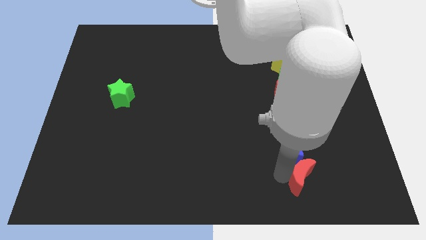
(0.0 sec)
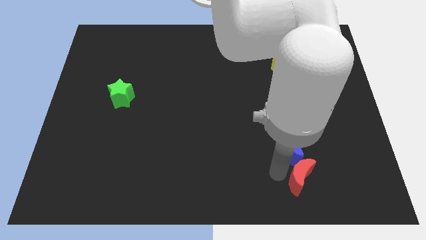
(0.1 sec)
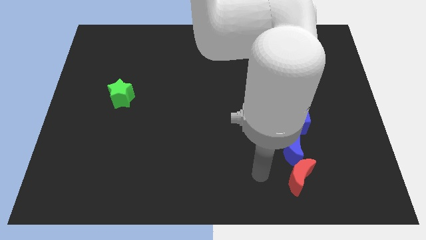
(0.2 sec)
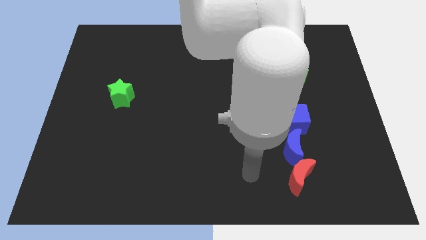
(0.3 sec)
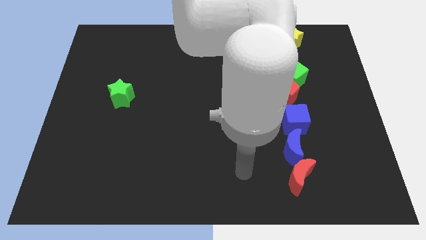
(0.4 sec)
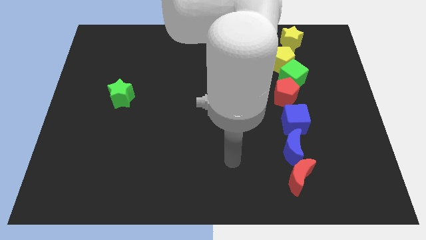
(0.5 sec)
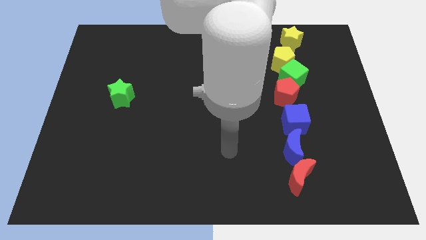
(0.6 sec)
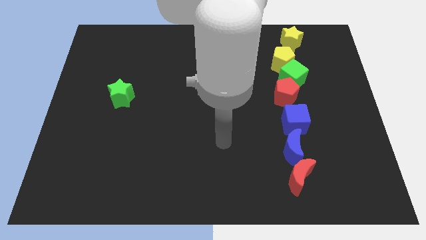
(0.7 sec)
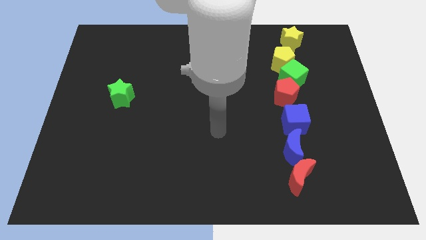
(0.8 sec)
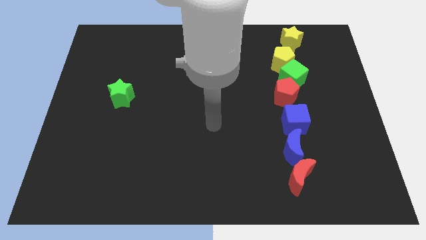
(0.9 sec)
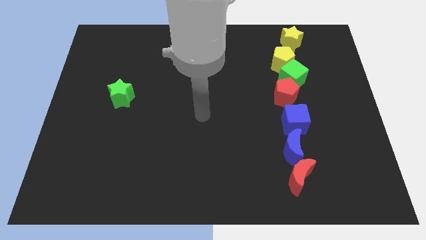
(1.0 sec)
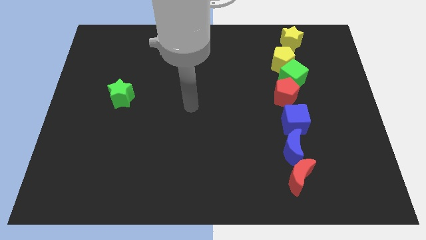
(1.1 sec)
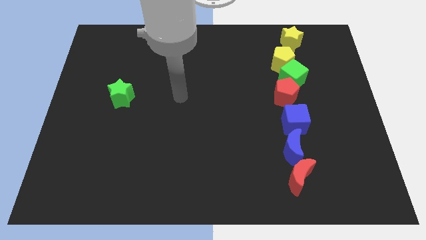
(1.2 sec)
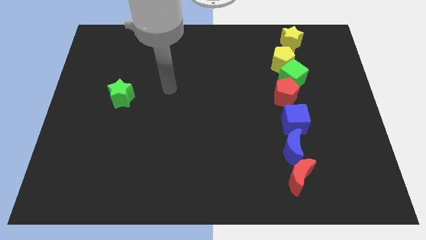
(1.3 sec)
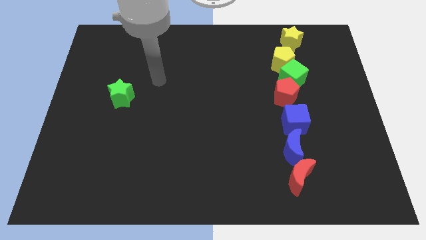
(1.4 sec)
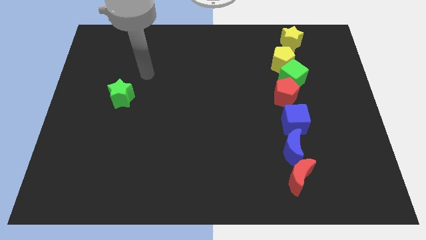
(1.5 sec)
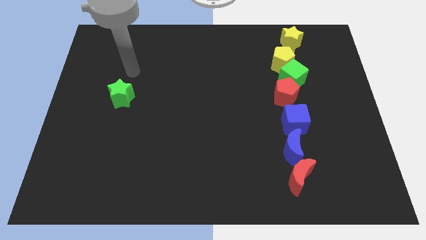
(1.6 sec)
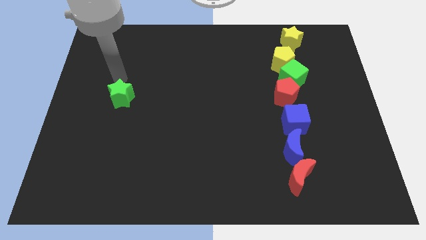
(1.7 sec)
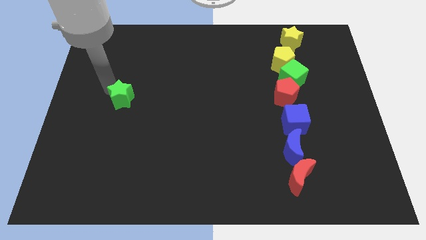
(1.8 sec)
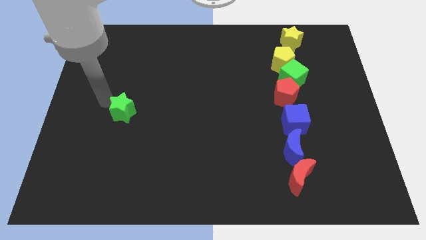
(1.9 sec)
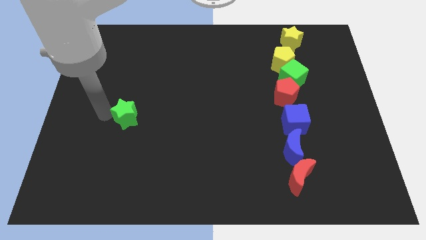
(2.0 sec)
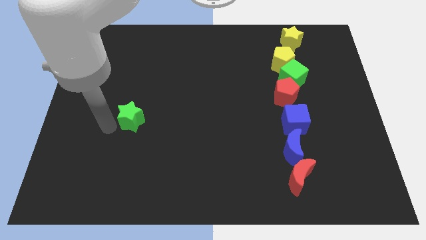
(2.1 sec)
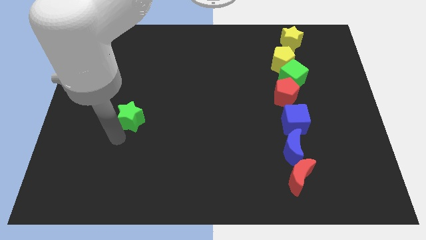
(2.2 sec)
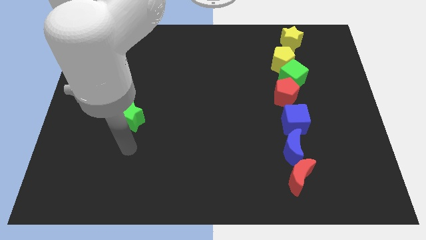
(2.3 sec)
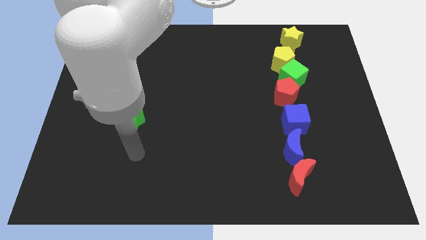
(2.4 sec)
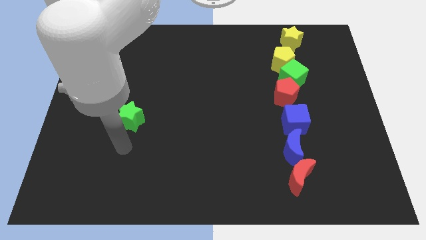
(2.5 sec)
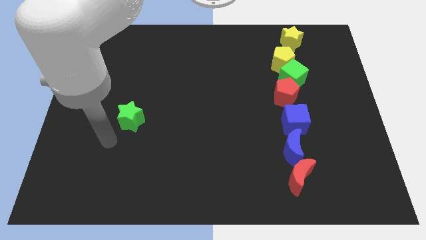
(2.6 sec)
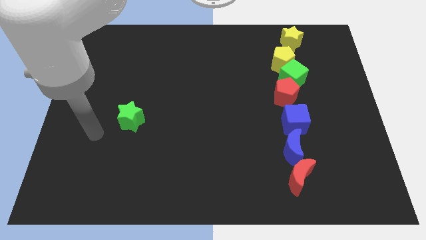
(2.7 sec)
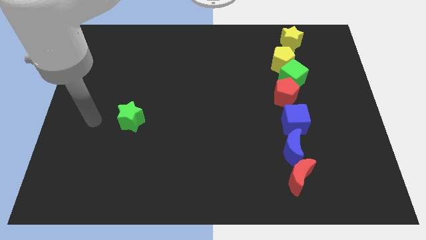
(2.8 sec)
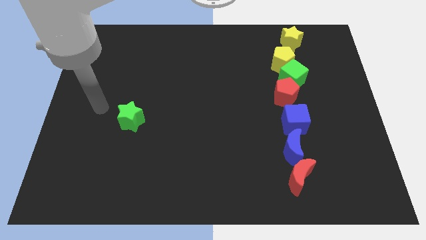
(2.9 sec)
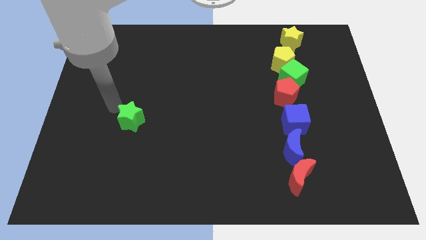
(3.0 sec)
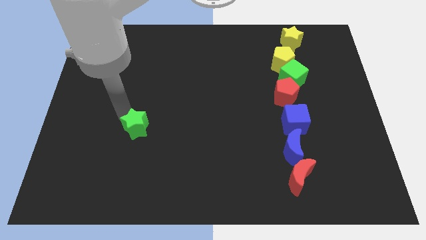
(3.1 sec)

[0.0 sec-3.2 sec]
move your arm away from the red moon

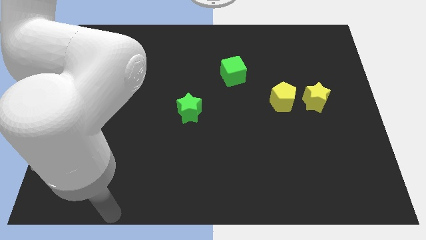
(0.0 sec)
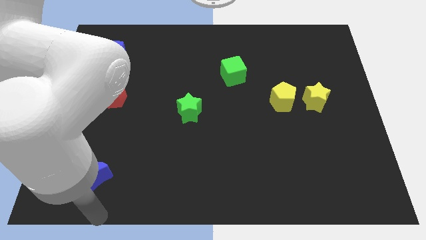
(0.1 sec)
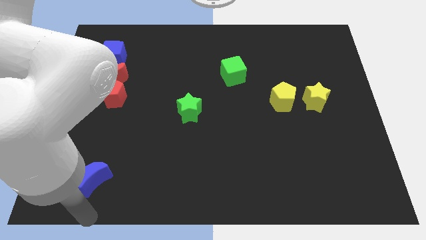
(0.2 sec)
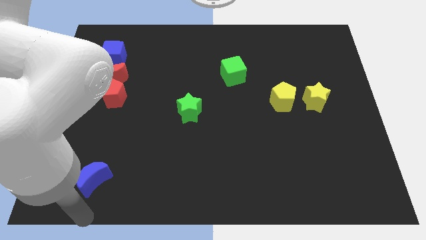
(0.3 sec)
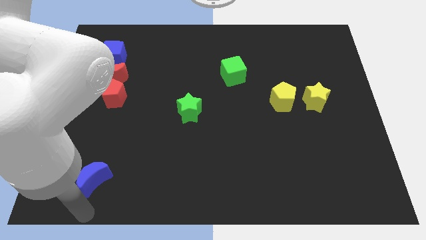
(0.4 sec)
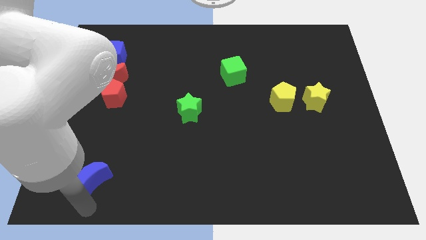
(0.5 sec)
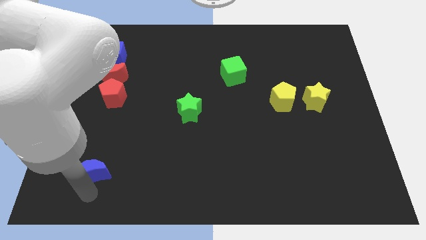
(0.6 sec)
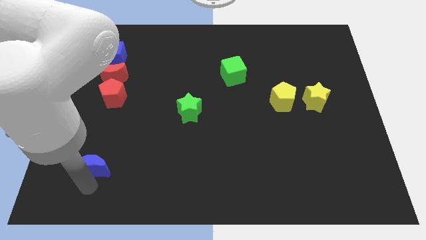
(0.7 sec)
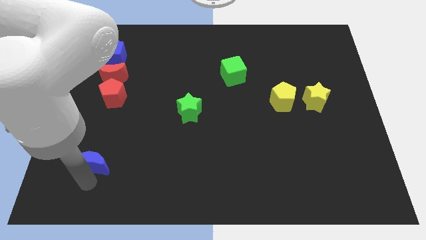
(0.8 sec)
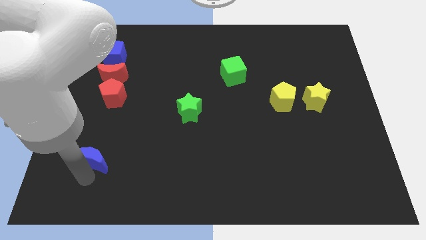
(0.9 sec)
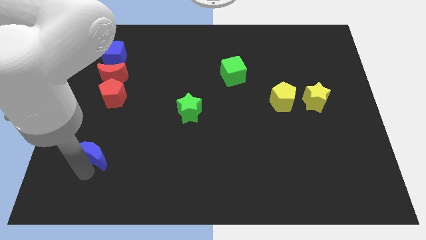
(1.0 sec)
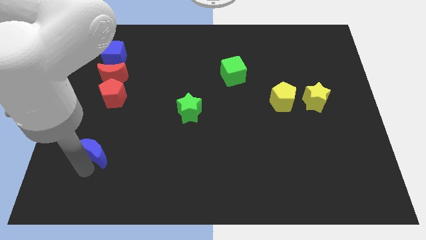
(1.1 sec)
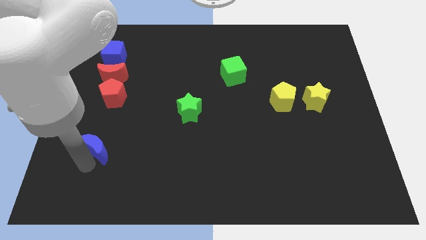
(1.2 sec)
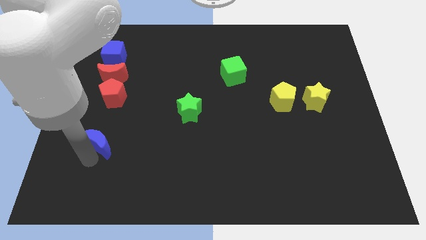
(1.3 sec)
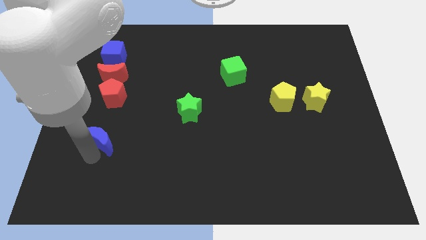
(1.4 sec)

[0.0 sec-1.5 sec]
push the blue crescent to the top of the board

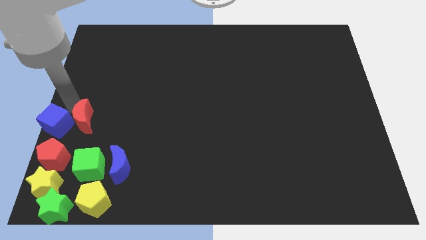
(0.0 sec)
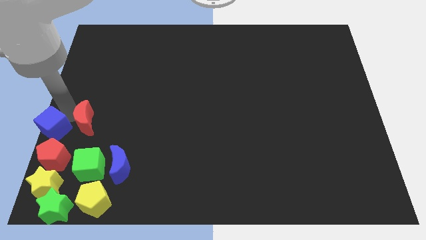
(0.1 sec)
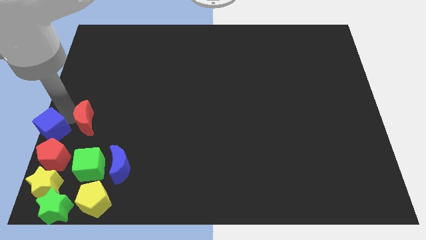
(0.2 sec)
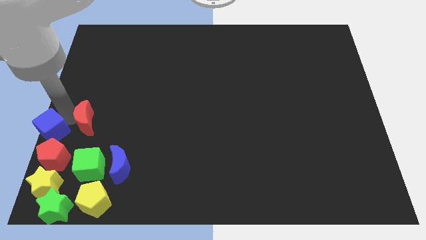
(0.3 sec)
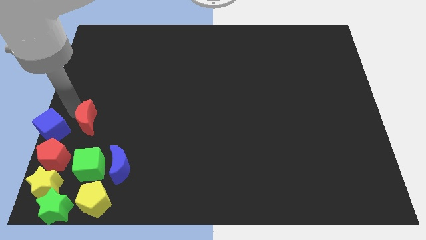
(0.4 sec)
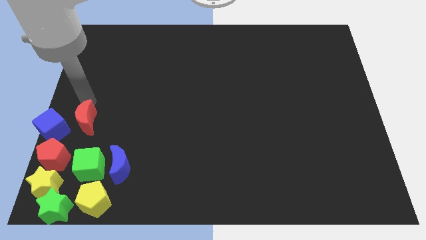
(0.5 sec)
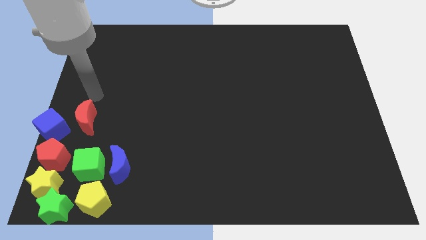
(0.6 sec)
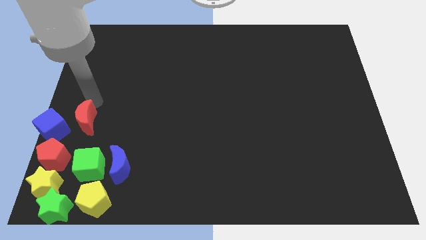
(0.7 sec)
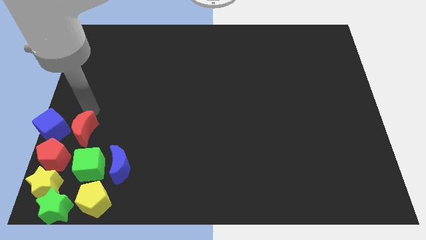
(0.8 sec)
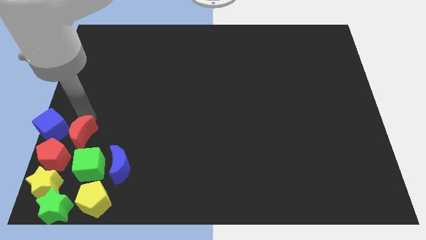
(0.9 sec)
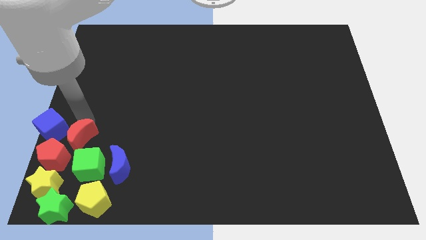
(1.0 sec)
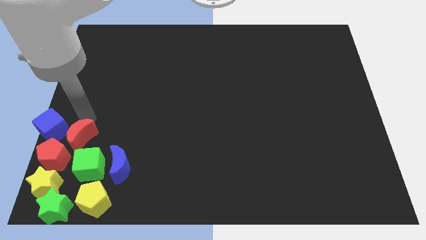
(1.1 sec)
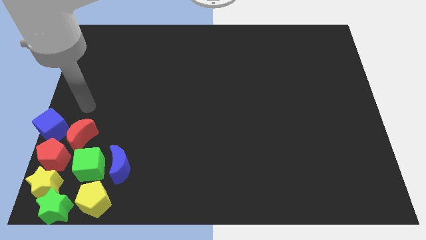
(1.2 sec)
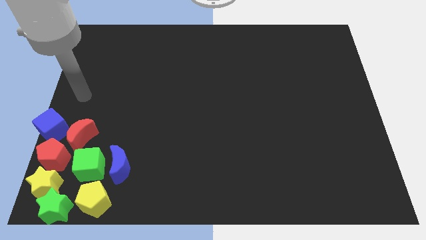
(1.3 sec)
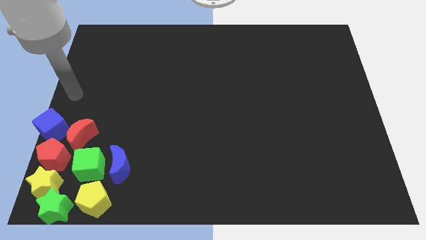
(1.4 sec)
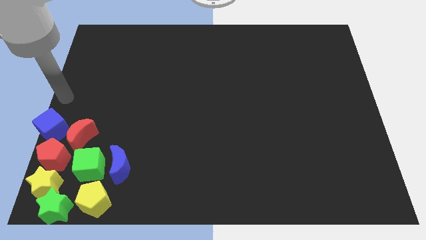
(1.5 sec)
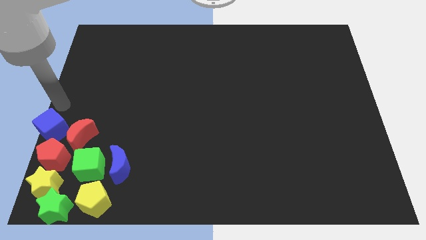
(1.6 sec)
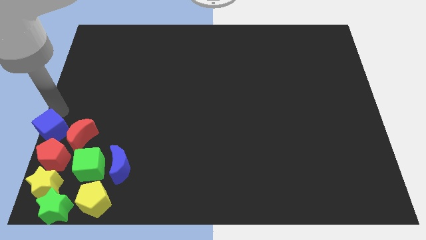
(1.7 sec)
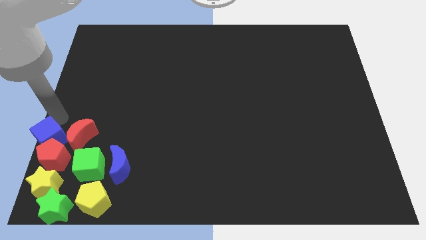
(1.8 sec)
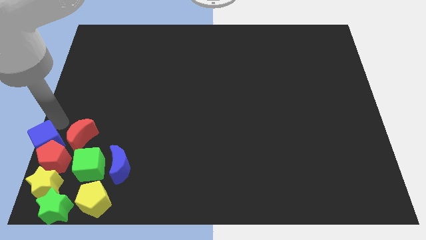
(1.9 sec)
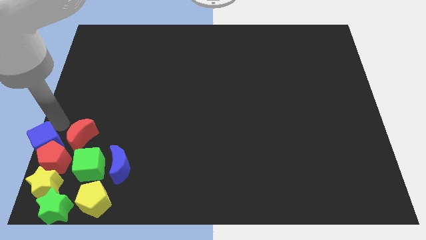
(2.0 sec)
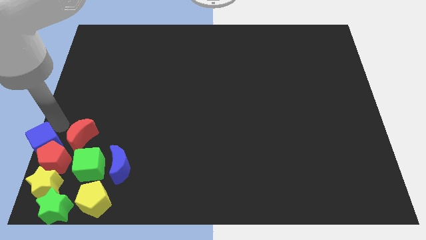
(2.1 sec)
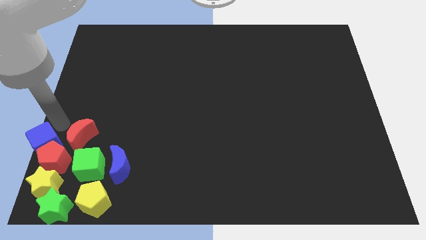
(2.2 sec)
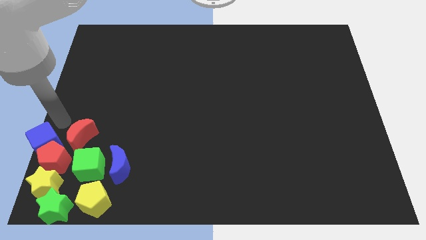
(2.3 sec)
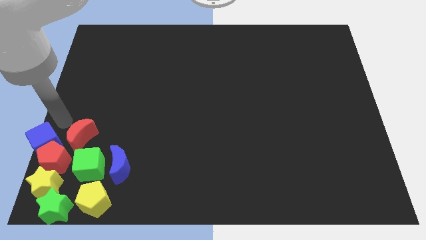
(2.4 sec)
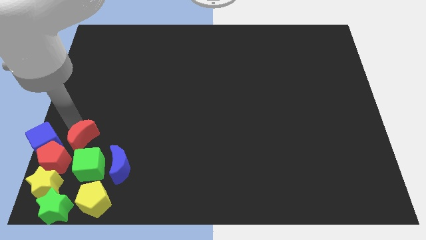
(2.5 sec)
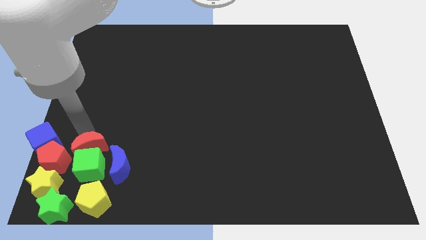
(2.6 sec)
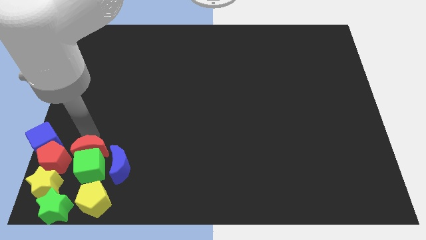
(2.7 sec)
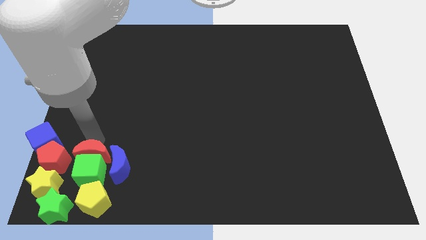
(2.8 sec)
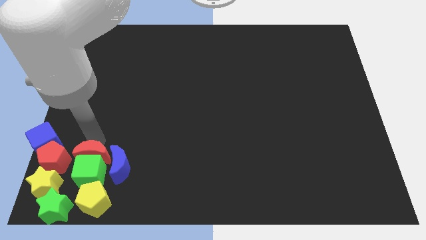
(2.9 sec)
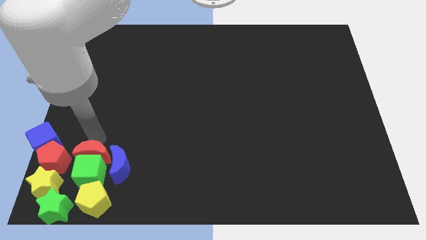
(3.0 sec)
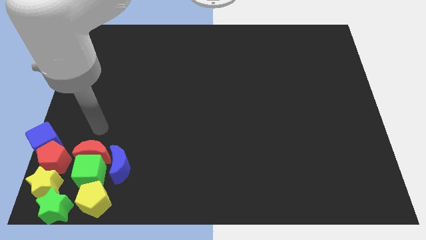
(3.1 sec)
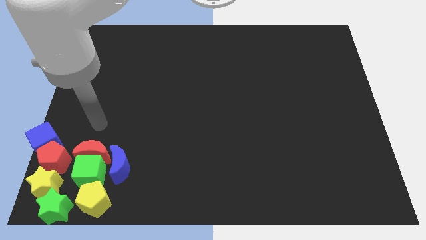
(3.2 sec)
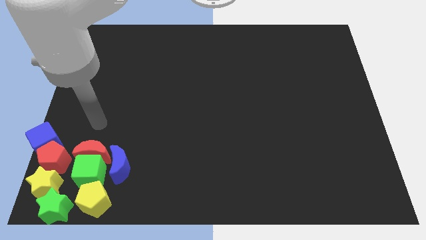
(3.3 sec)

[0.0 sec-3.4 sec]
push the blue cube and red crescent into the group of blocks

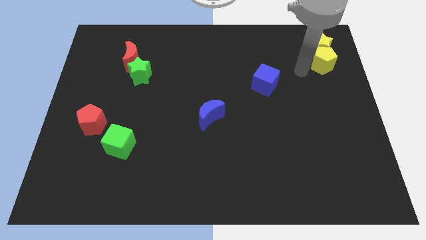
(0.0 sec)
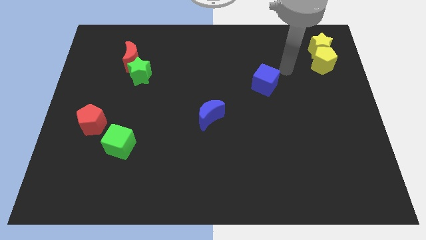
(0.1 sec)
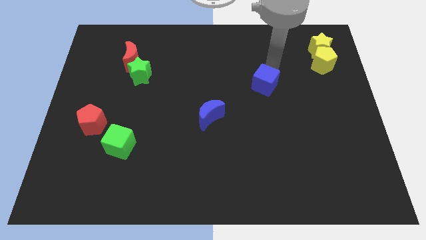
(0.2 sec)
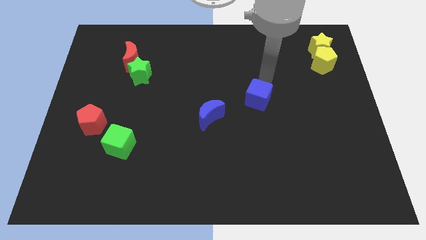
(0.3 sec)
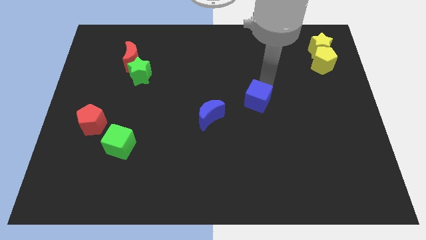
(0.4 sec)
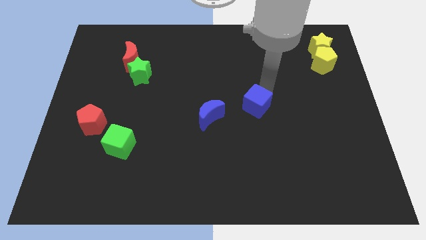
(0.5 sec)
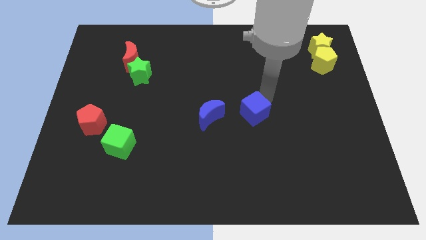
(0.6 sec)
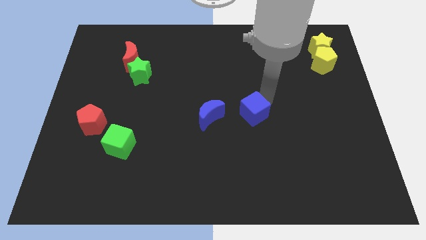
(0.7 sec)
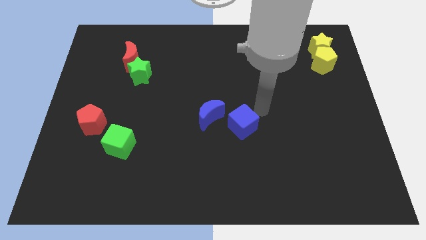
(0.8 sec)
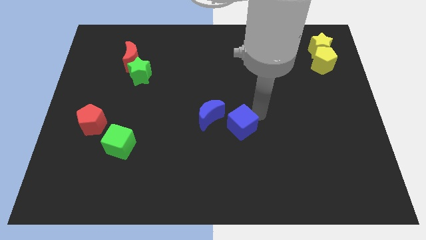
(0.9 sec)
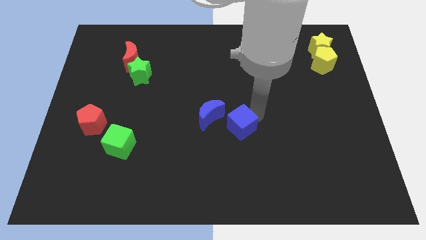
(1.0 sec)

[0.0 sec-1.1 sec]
place blue cube to the center of the board
